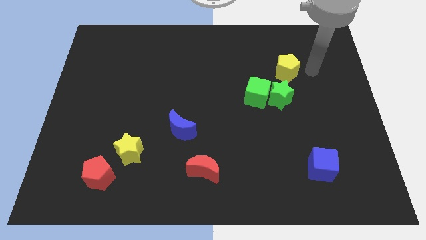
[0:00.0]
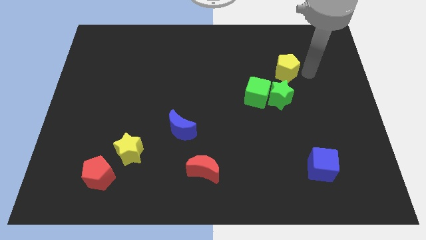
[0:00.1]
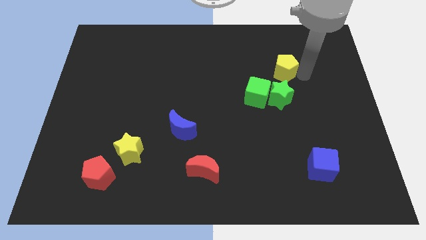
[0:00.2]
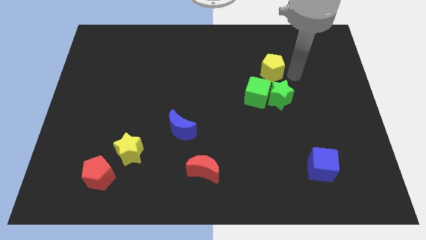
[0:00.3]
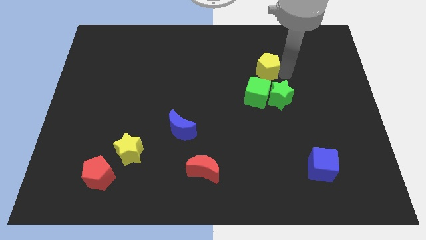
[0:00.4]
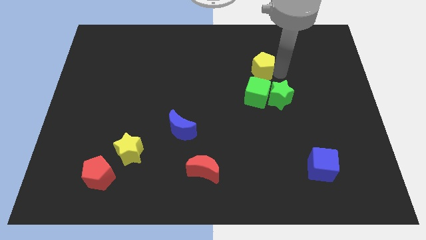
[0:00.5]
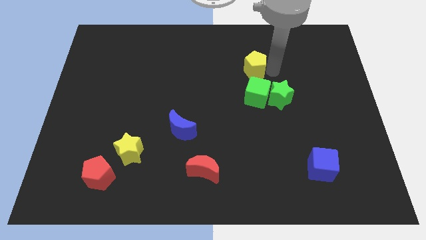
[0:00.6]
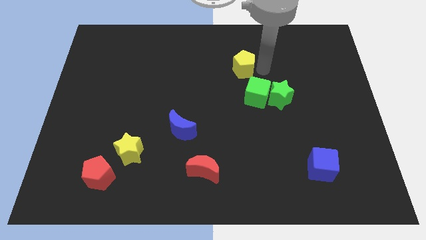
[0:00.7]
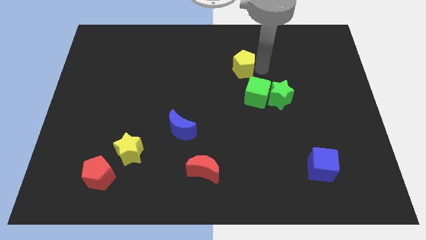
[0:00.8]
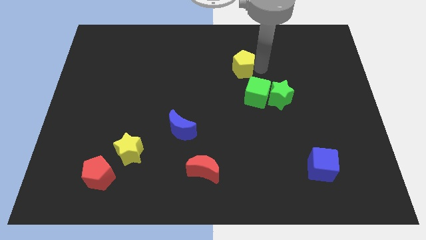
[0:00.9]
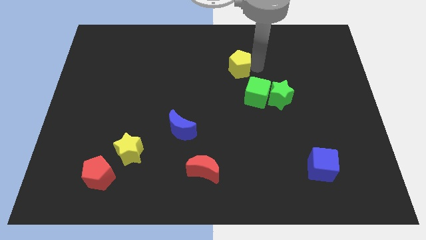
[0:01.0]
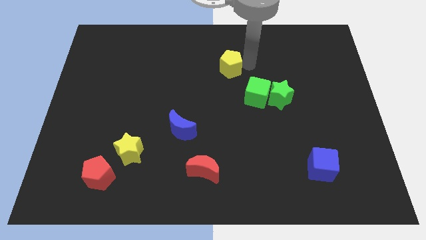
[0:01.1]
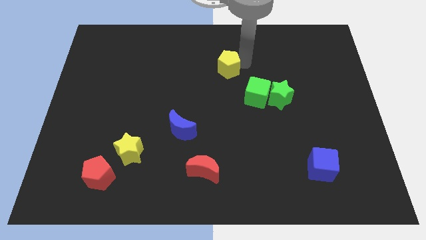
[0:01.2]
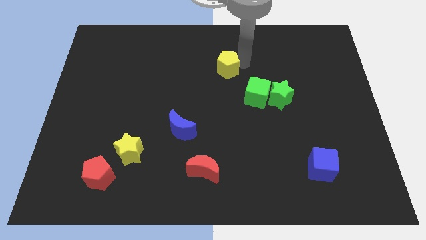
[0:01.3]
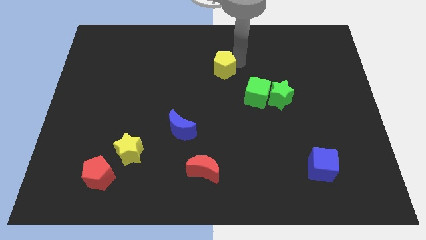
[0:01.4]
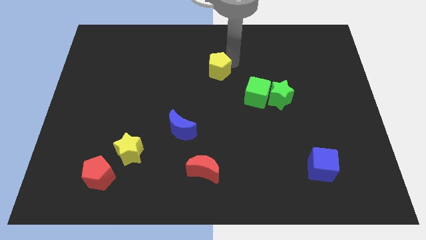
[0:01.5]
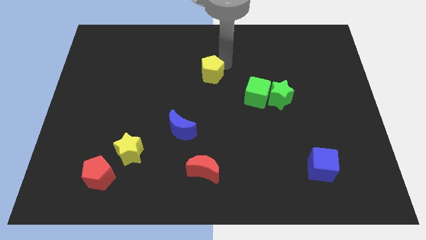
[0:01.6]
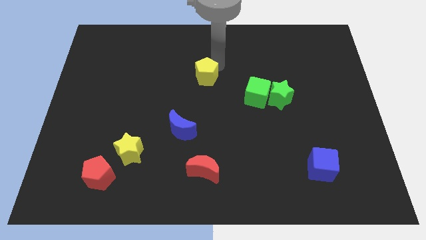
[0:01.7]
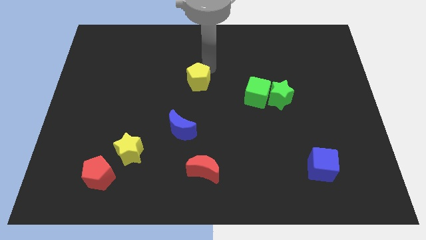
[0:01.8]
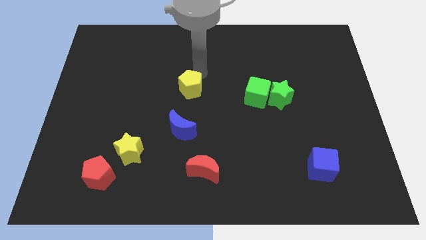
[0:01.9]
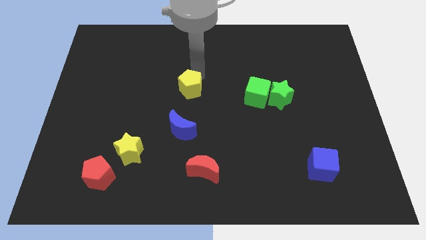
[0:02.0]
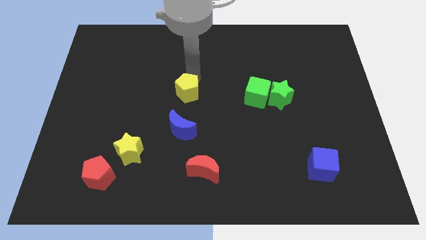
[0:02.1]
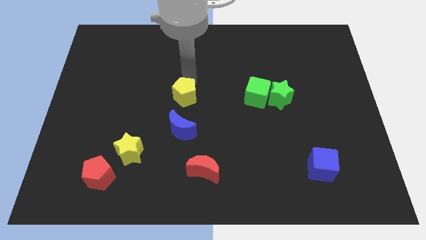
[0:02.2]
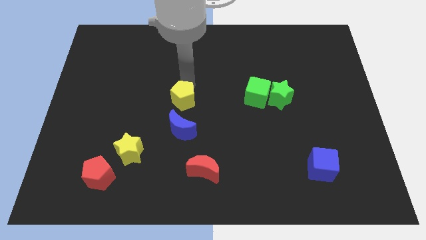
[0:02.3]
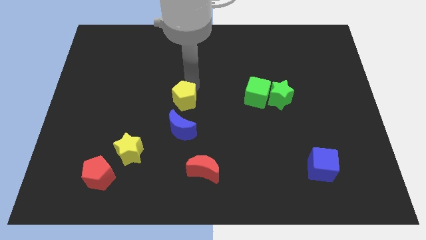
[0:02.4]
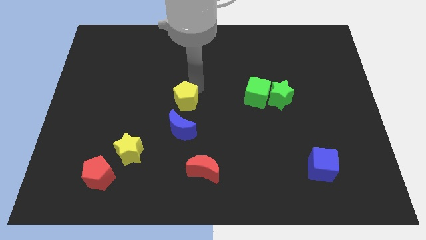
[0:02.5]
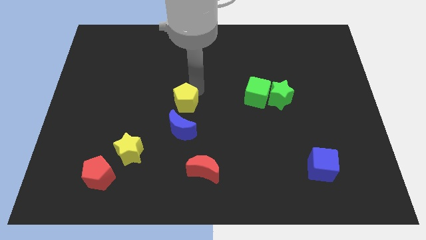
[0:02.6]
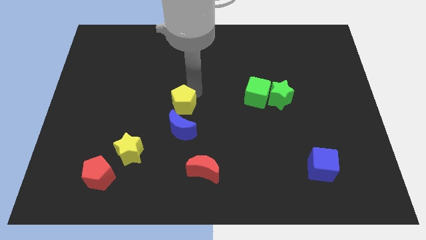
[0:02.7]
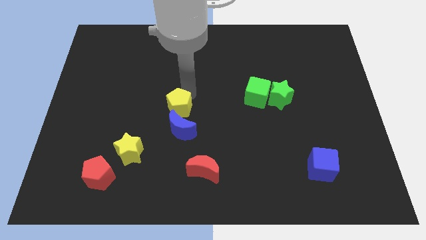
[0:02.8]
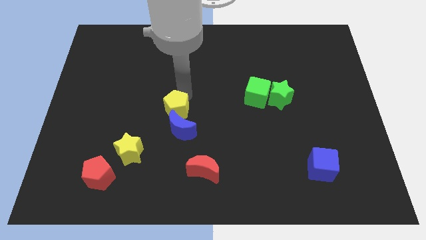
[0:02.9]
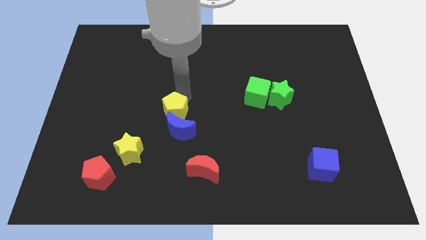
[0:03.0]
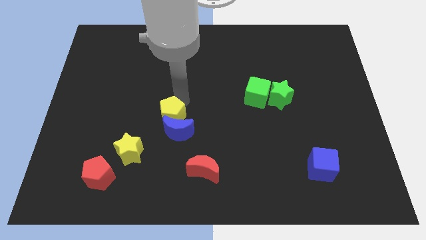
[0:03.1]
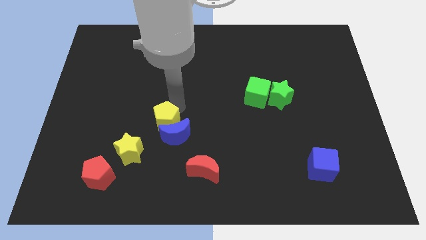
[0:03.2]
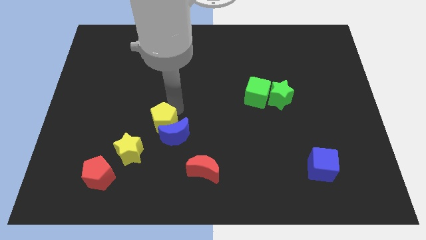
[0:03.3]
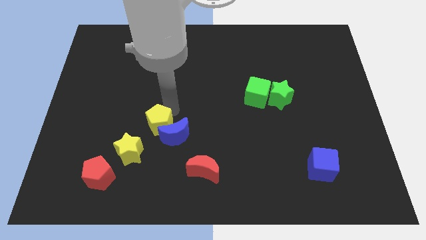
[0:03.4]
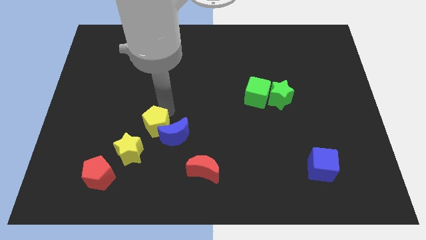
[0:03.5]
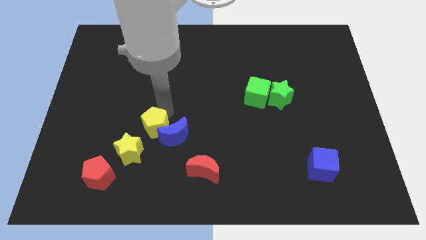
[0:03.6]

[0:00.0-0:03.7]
attach the yellow pentagon to the blue moon

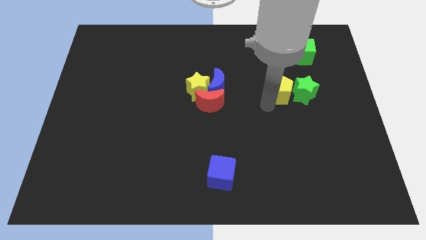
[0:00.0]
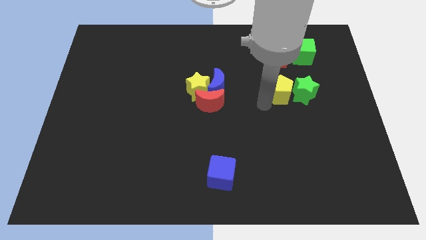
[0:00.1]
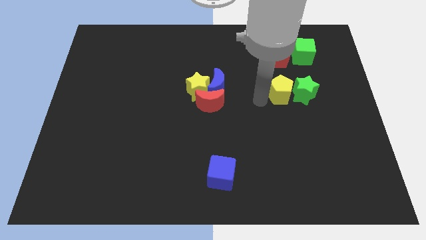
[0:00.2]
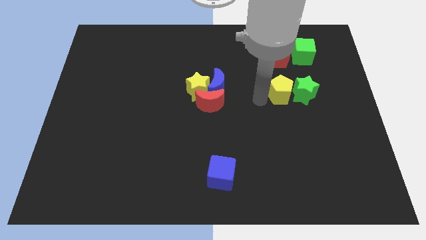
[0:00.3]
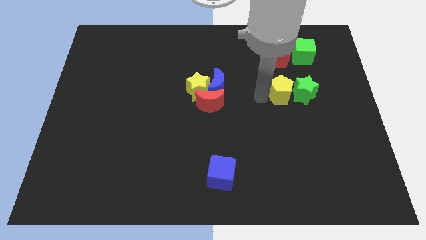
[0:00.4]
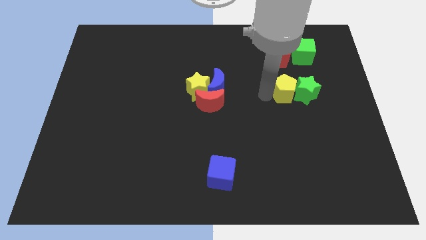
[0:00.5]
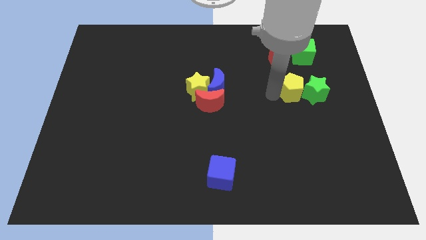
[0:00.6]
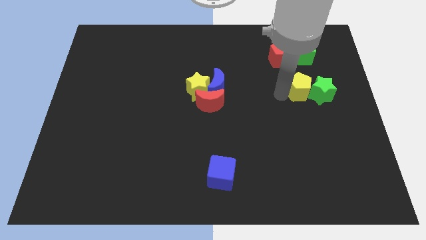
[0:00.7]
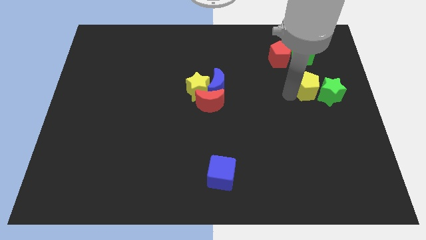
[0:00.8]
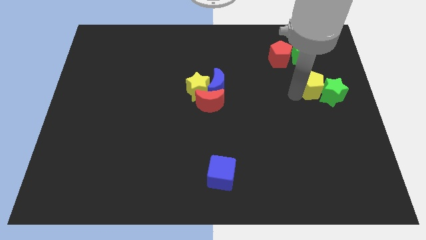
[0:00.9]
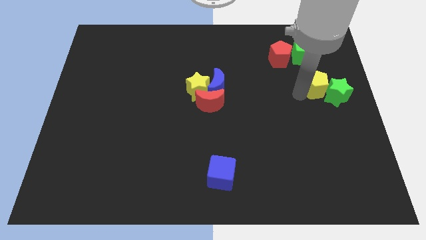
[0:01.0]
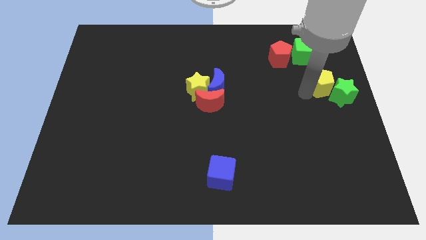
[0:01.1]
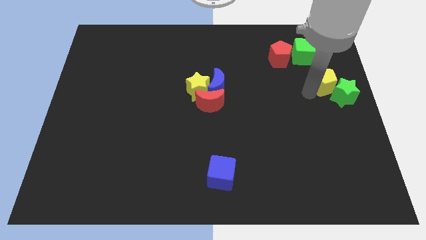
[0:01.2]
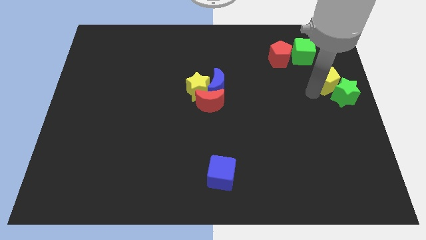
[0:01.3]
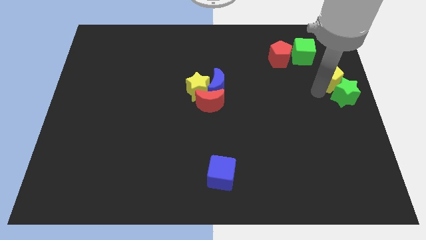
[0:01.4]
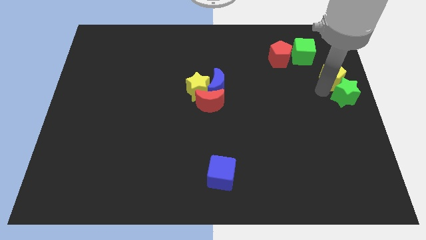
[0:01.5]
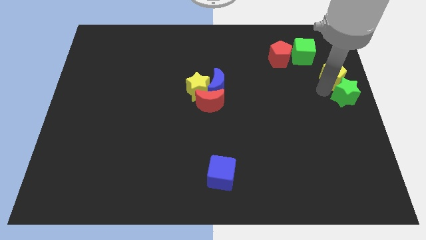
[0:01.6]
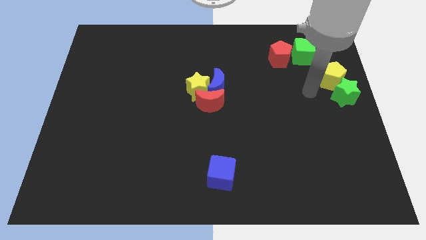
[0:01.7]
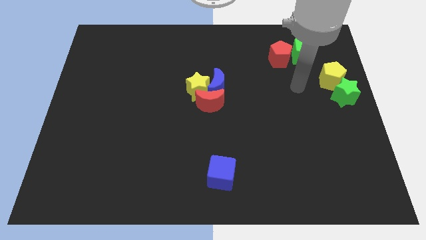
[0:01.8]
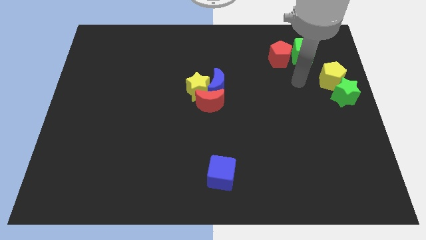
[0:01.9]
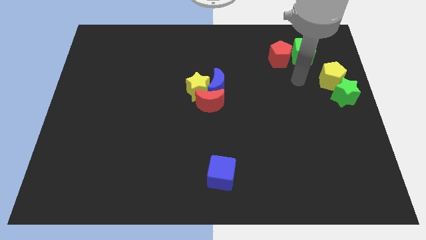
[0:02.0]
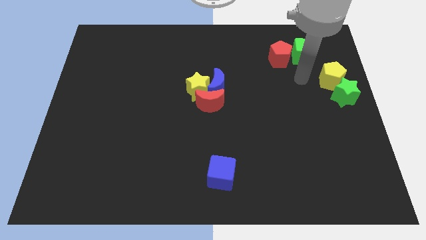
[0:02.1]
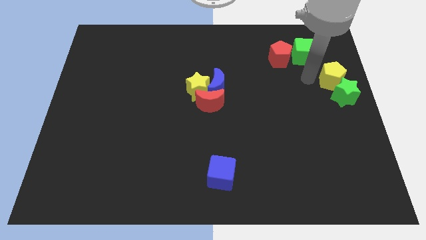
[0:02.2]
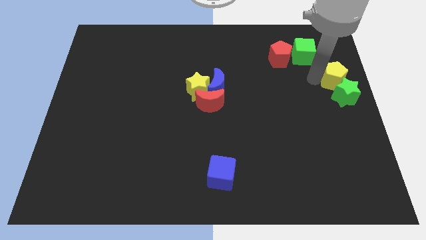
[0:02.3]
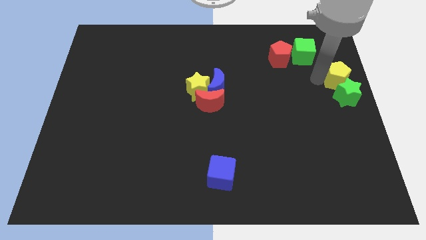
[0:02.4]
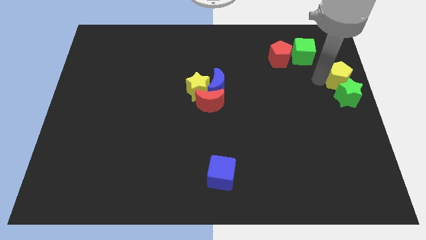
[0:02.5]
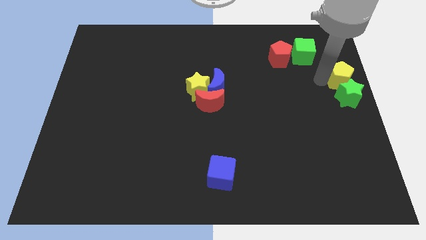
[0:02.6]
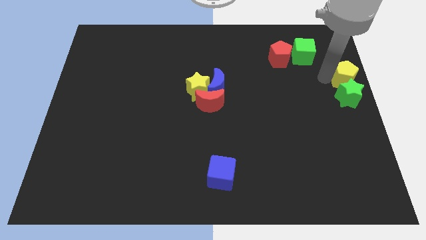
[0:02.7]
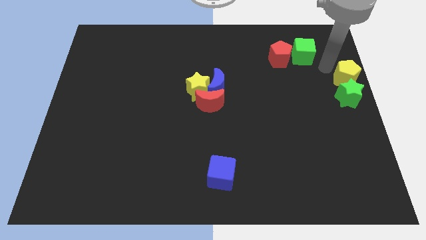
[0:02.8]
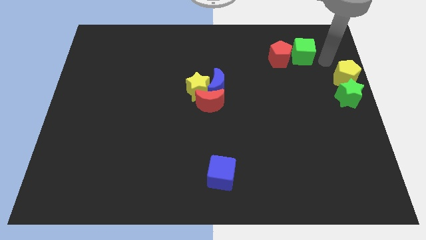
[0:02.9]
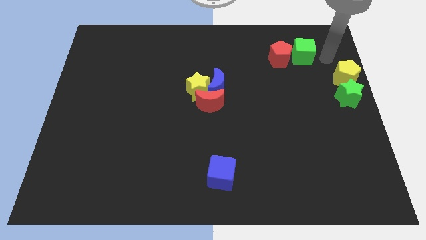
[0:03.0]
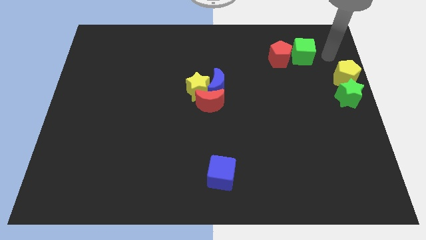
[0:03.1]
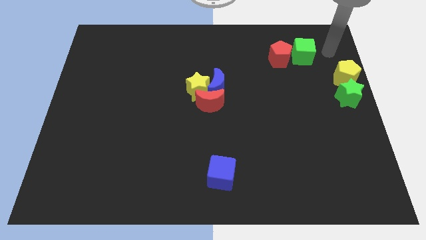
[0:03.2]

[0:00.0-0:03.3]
place the yellow pentagon and green star to the center right side of the board

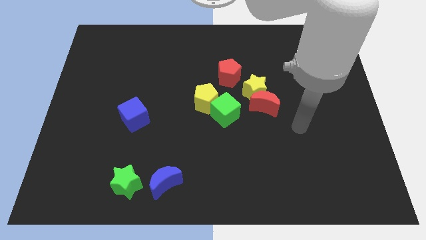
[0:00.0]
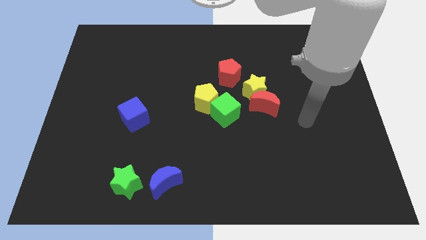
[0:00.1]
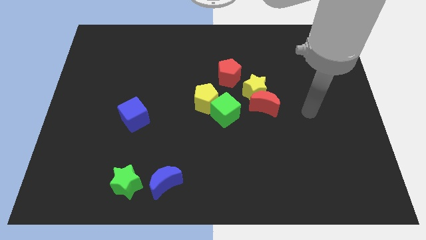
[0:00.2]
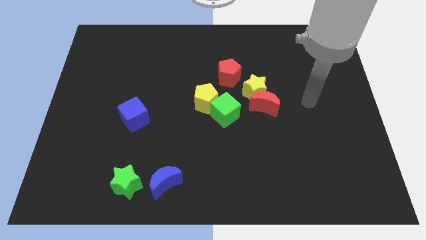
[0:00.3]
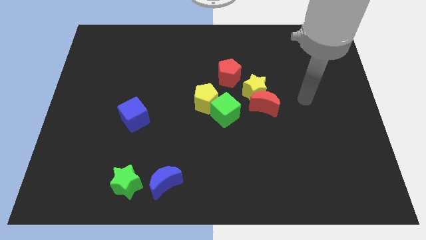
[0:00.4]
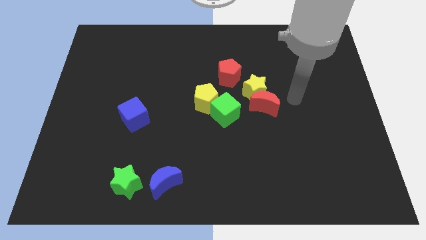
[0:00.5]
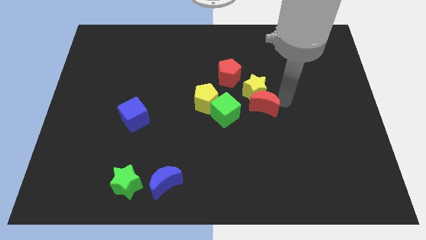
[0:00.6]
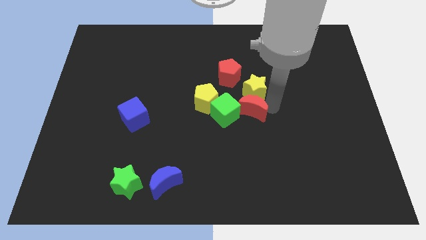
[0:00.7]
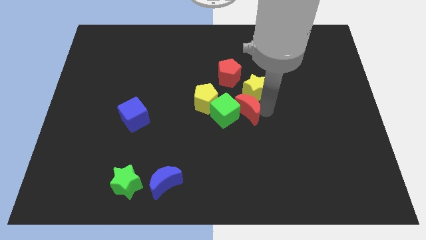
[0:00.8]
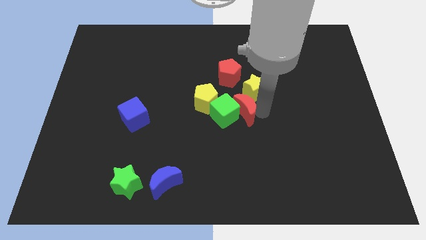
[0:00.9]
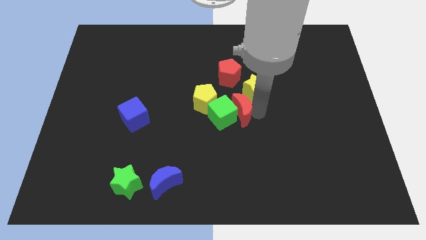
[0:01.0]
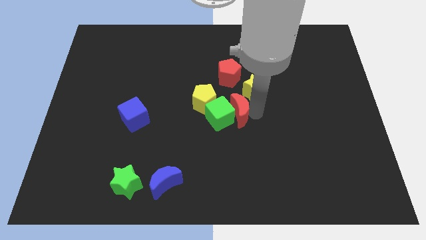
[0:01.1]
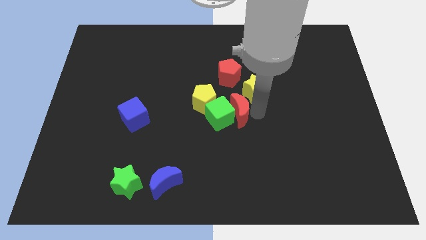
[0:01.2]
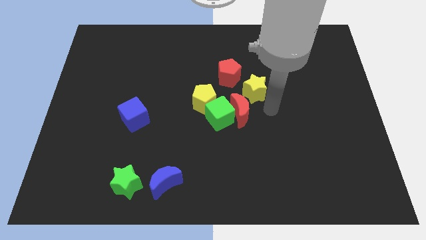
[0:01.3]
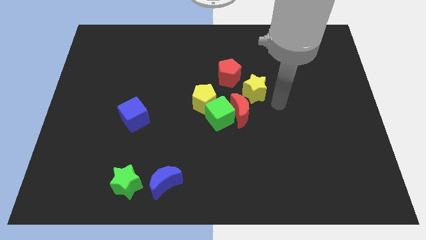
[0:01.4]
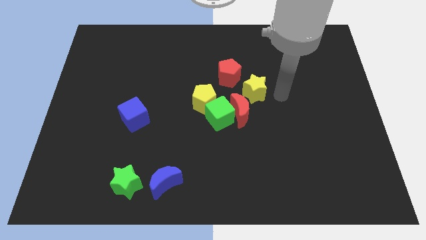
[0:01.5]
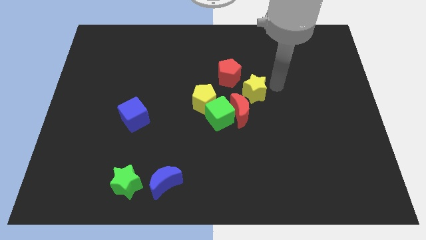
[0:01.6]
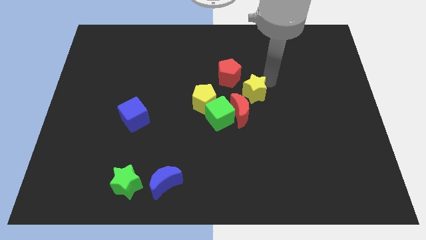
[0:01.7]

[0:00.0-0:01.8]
move the red moon into the green cube

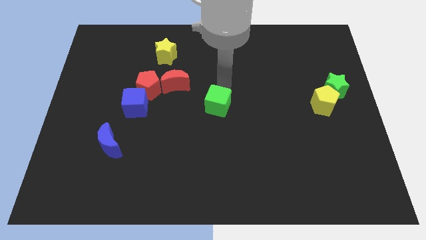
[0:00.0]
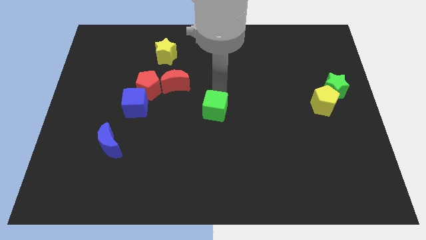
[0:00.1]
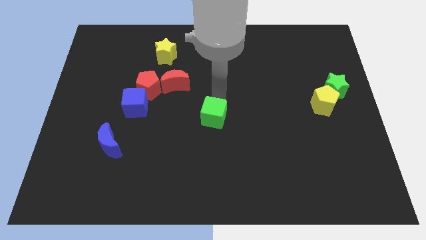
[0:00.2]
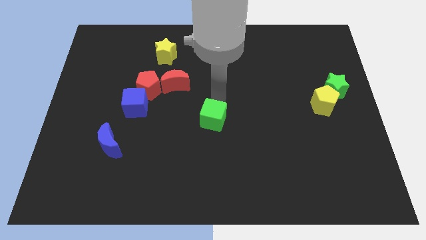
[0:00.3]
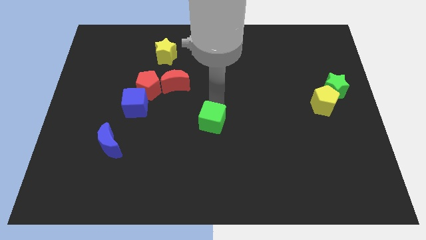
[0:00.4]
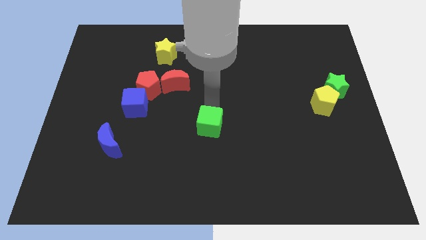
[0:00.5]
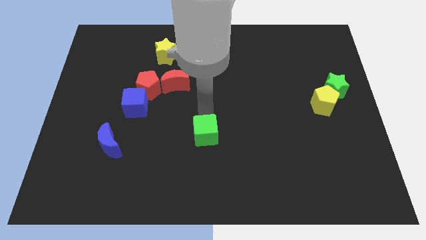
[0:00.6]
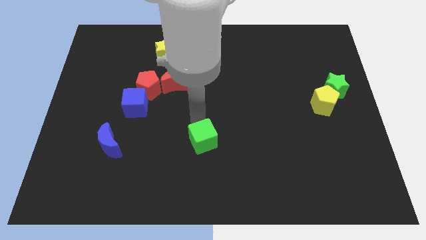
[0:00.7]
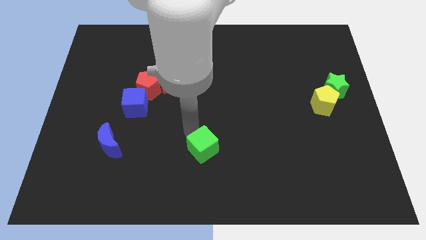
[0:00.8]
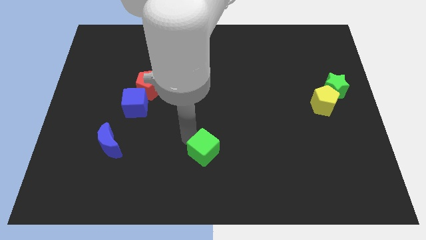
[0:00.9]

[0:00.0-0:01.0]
place the green cube right to the blue moon
